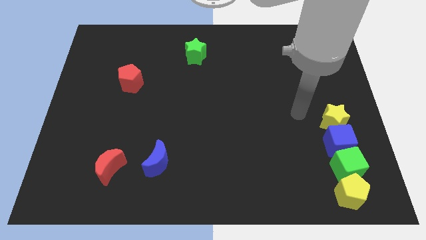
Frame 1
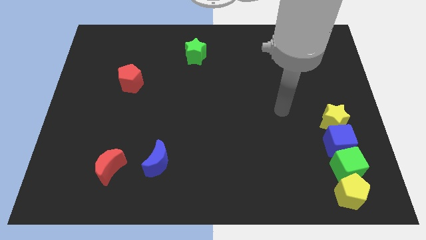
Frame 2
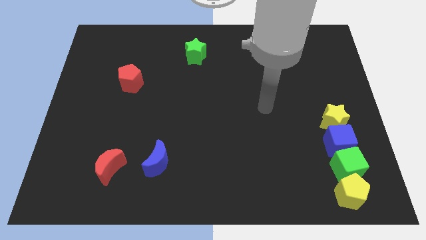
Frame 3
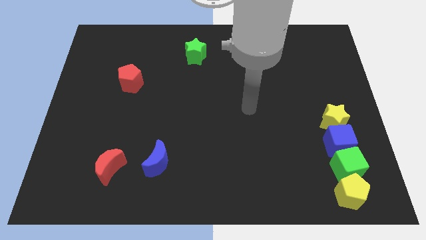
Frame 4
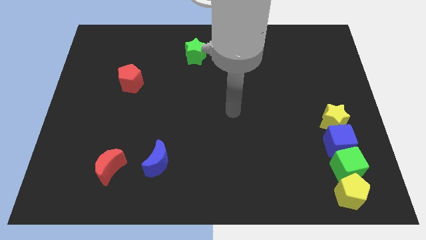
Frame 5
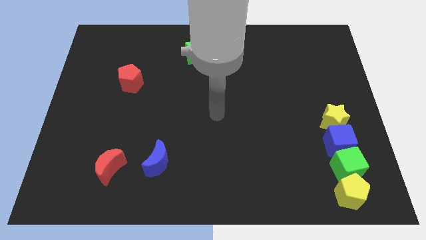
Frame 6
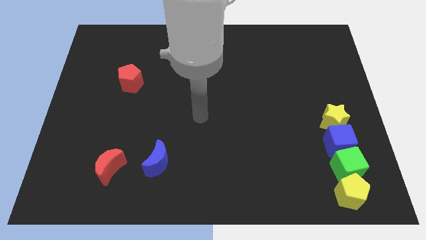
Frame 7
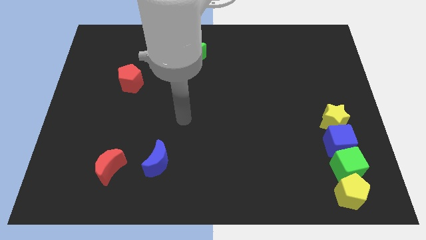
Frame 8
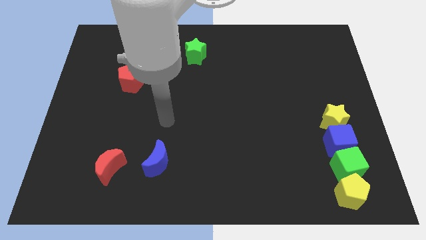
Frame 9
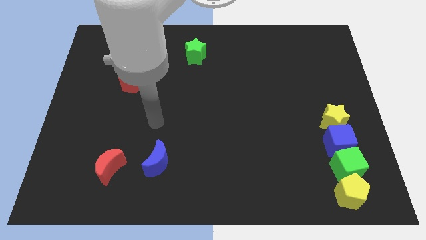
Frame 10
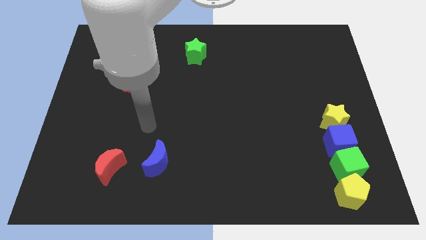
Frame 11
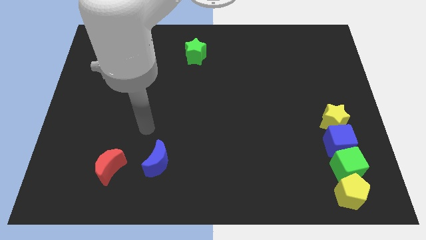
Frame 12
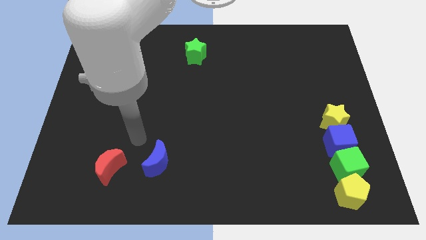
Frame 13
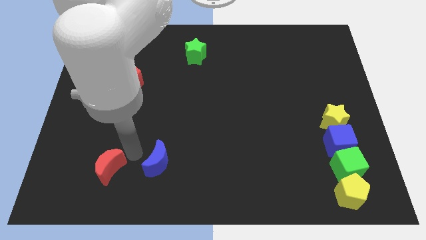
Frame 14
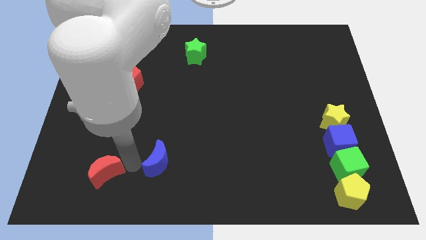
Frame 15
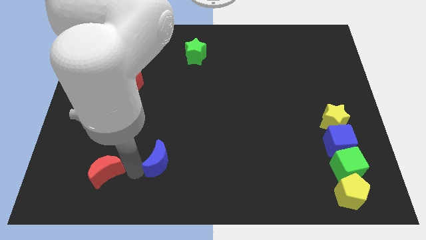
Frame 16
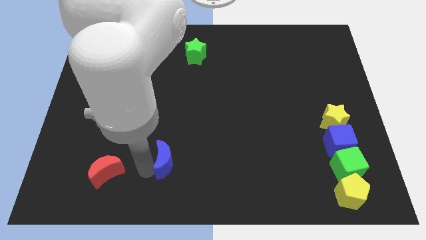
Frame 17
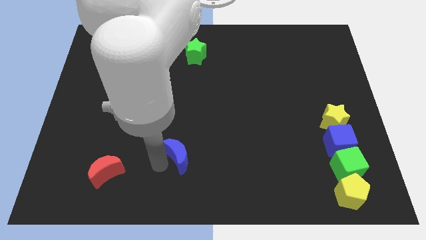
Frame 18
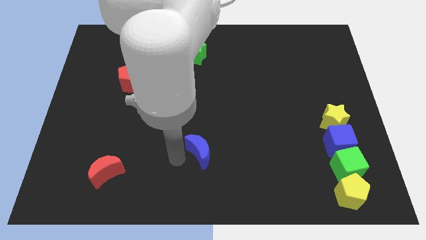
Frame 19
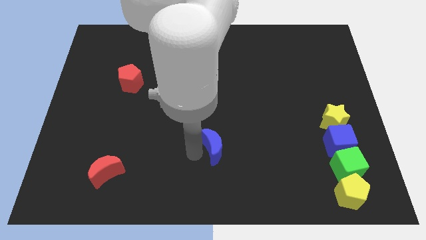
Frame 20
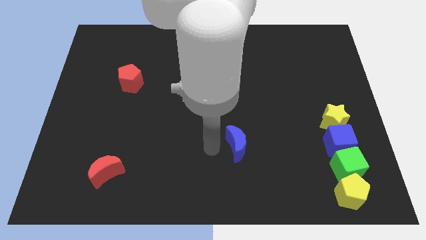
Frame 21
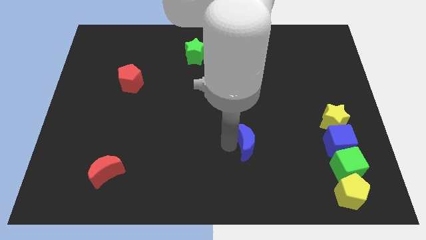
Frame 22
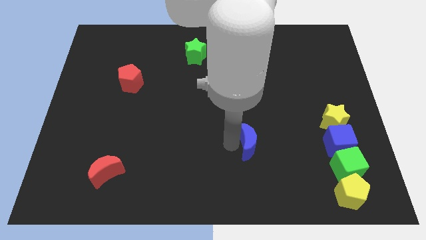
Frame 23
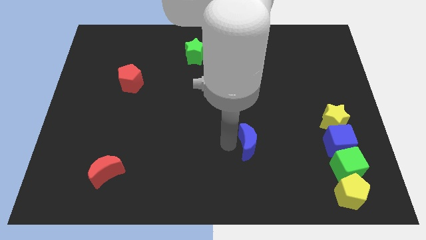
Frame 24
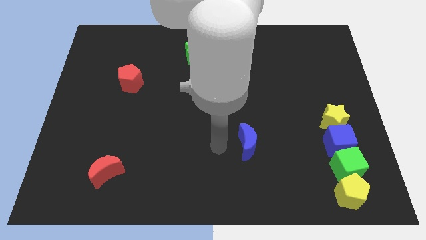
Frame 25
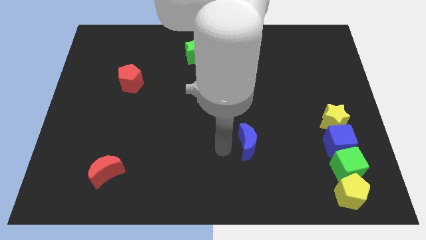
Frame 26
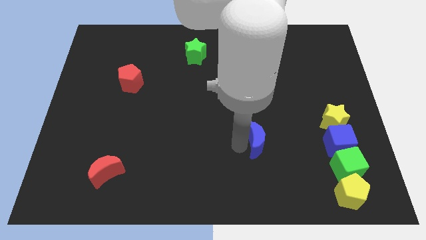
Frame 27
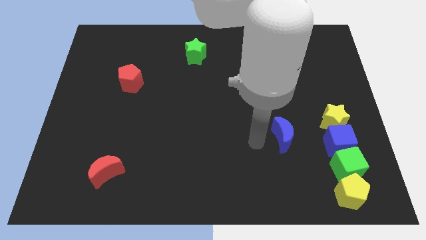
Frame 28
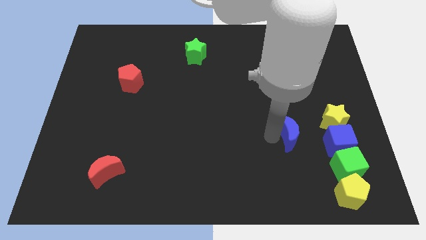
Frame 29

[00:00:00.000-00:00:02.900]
move the moons in opposite directions

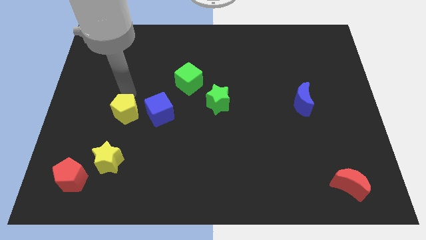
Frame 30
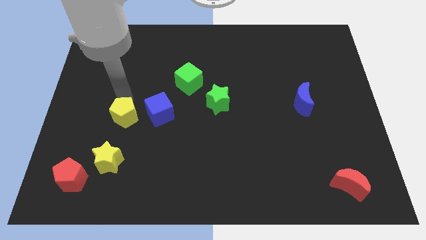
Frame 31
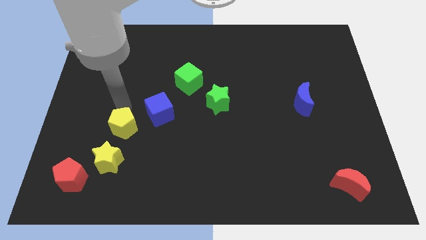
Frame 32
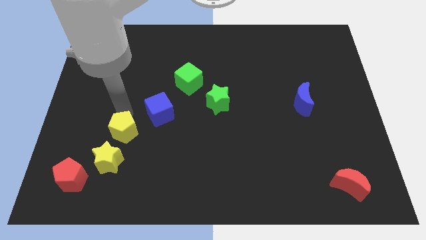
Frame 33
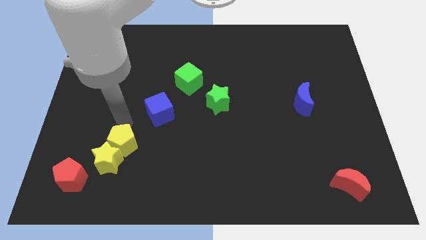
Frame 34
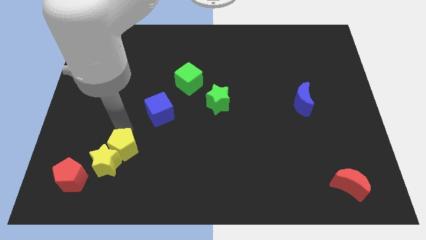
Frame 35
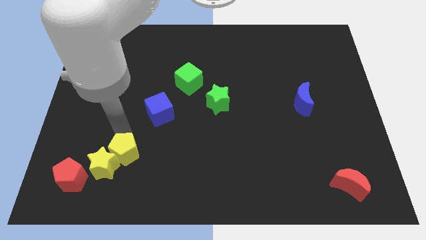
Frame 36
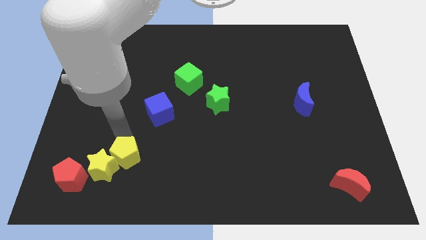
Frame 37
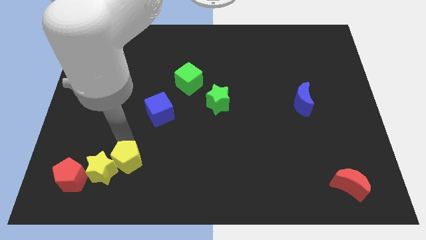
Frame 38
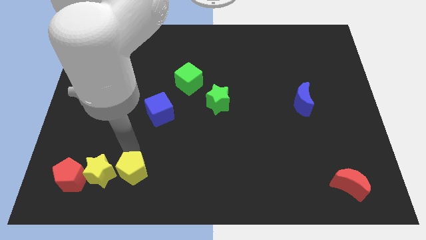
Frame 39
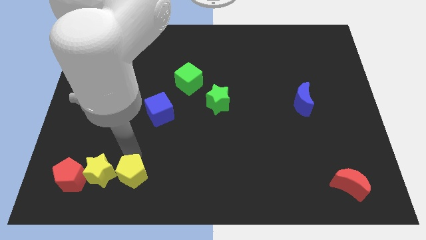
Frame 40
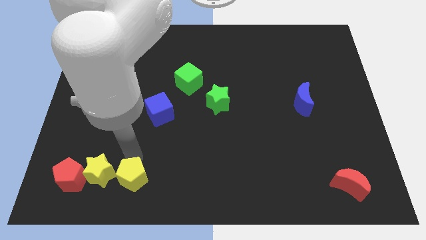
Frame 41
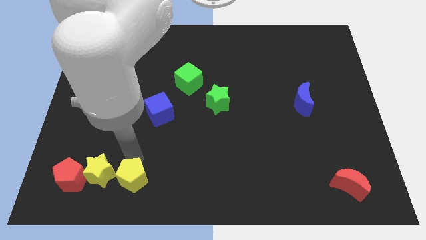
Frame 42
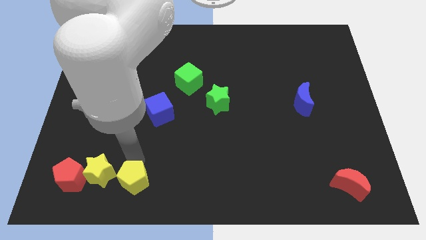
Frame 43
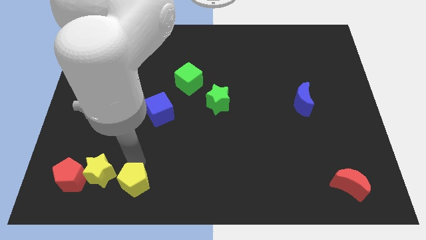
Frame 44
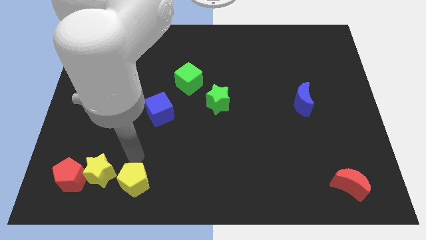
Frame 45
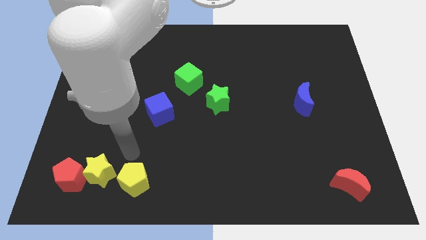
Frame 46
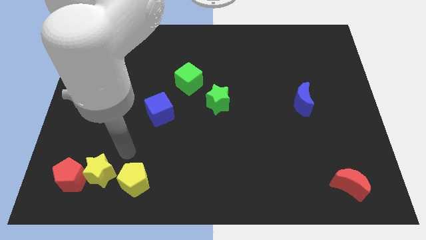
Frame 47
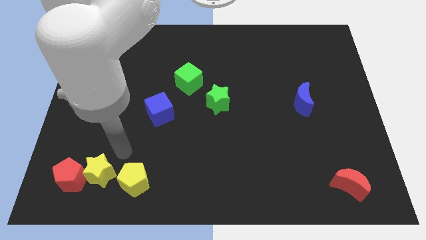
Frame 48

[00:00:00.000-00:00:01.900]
place the yellow pentagon to the right of the yellow star

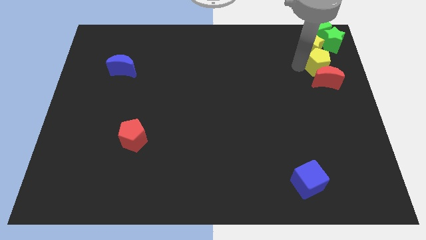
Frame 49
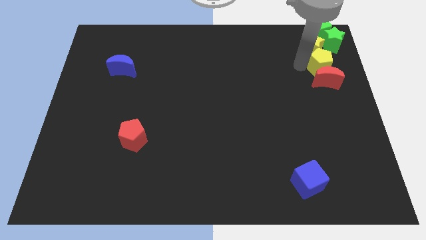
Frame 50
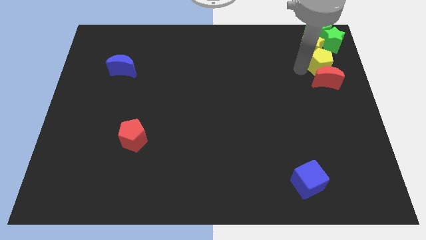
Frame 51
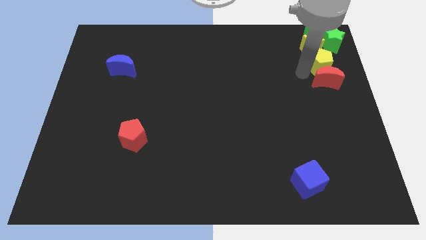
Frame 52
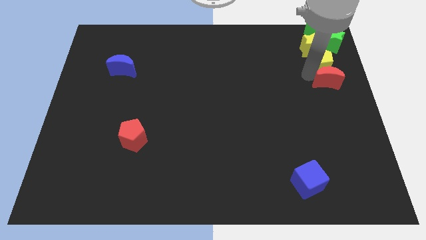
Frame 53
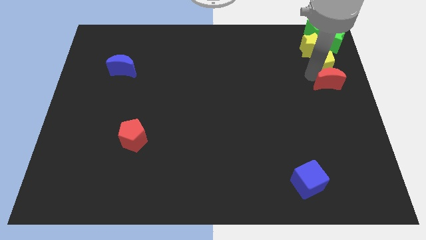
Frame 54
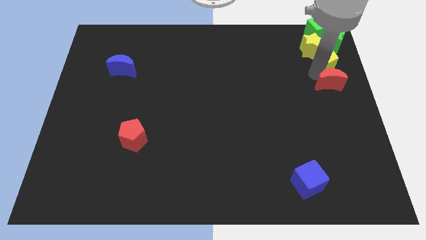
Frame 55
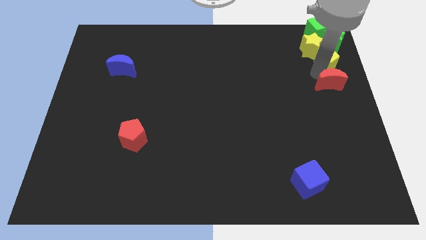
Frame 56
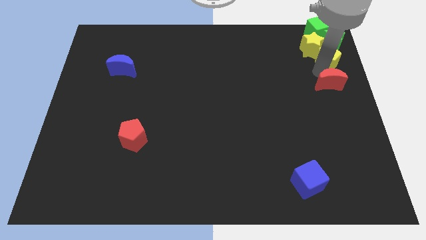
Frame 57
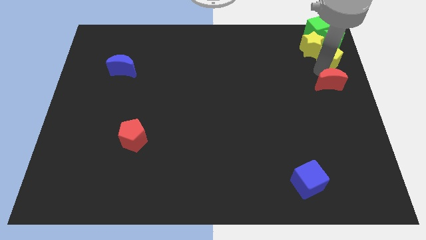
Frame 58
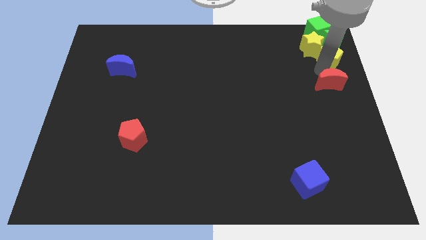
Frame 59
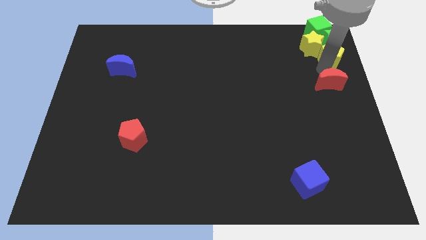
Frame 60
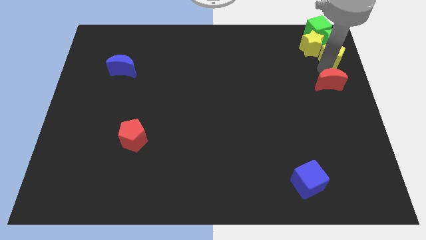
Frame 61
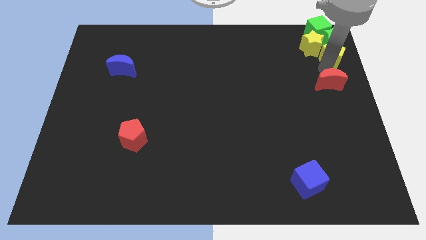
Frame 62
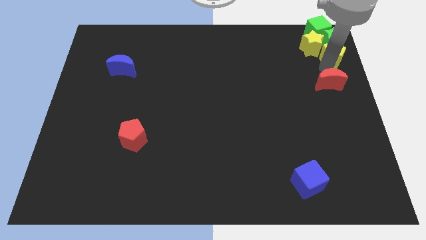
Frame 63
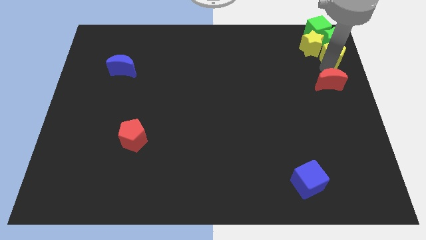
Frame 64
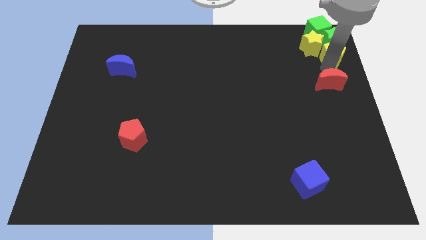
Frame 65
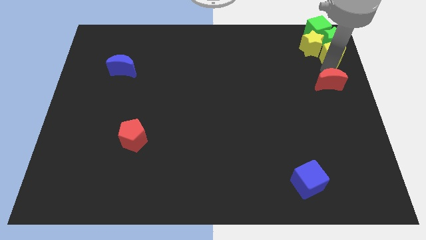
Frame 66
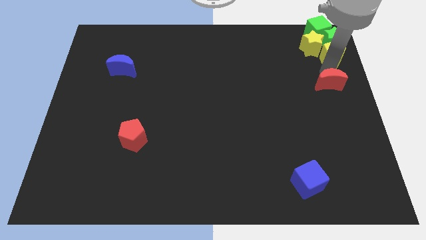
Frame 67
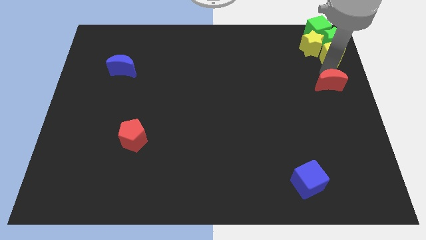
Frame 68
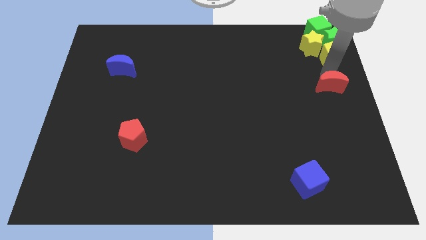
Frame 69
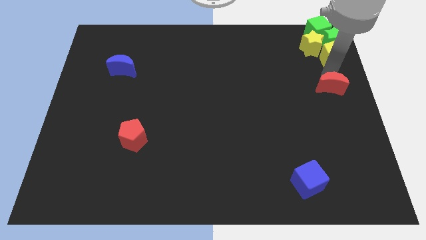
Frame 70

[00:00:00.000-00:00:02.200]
move the yellow pentagon to the bottom of the green star

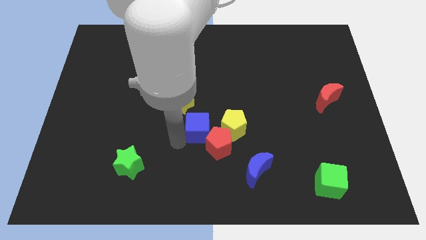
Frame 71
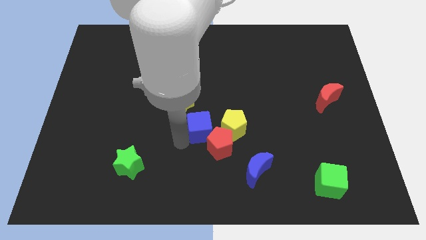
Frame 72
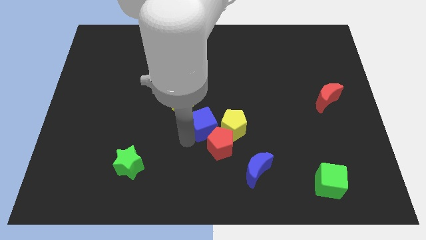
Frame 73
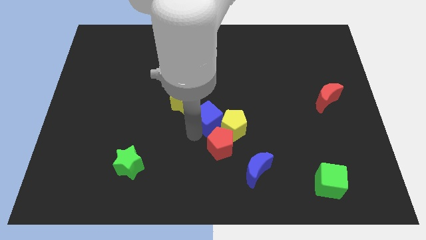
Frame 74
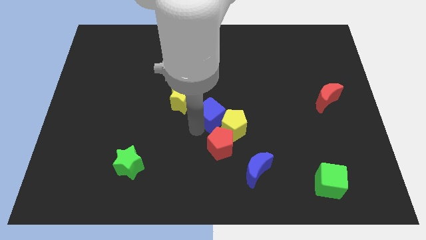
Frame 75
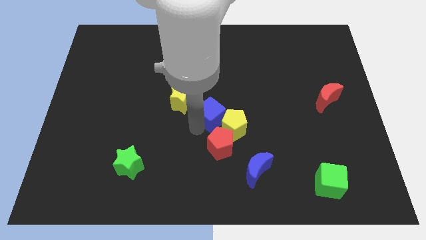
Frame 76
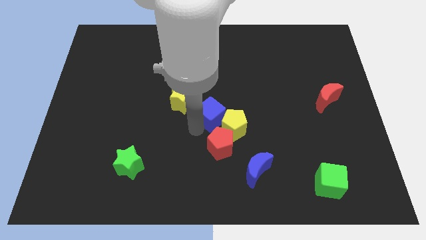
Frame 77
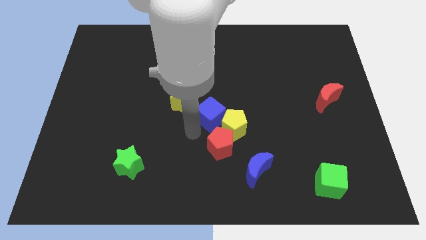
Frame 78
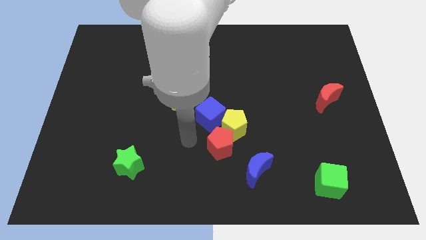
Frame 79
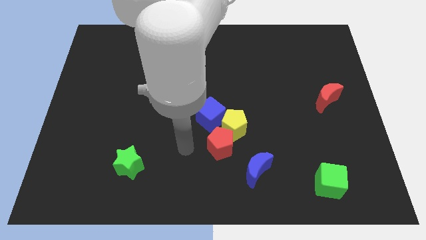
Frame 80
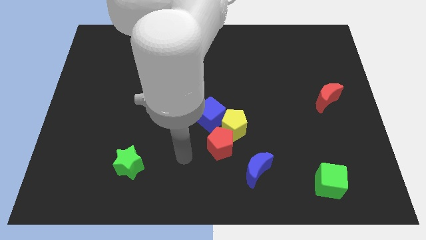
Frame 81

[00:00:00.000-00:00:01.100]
push the blue cube in between the yellow star and the yellow pentagon

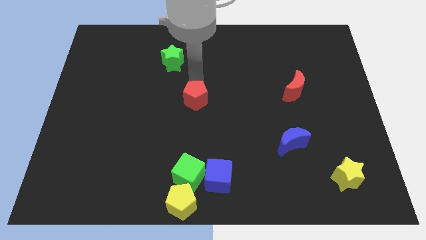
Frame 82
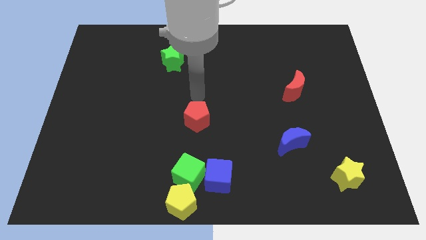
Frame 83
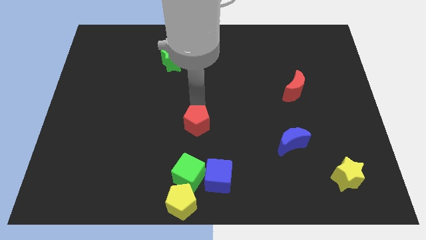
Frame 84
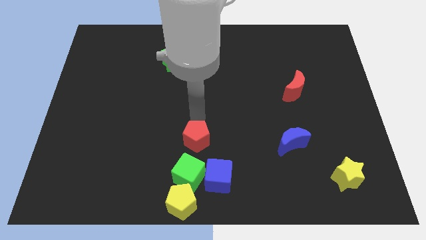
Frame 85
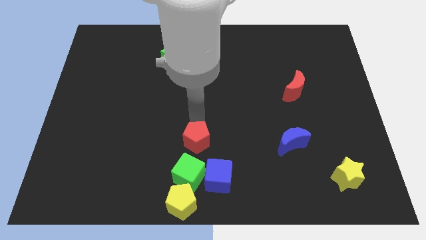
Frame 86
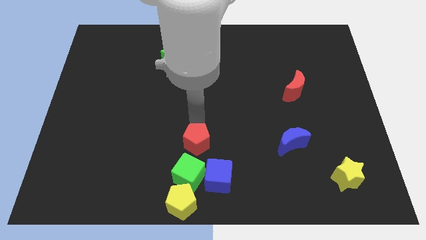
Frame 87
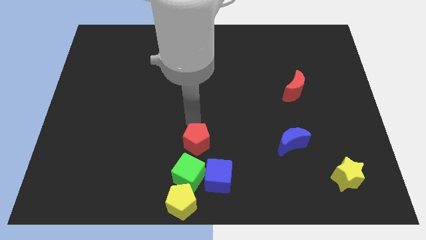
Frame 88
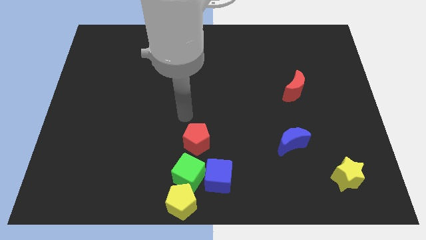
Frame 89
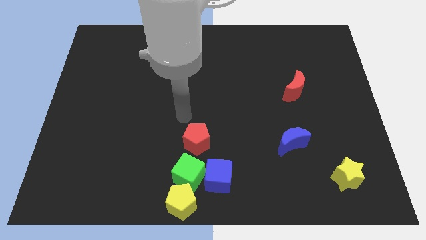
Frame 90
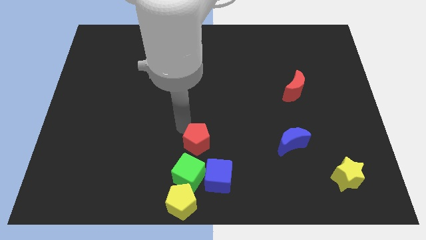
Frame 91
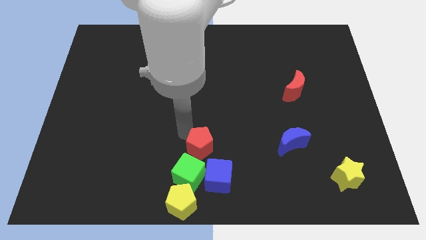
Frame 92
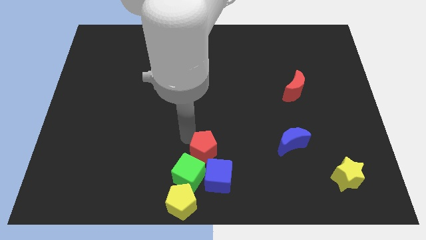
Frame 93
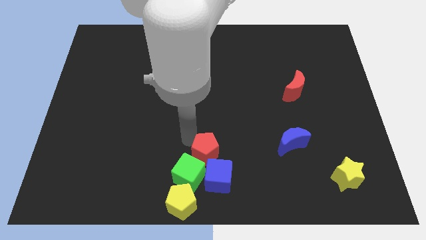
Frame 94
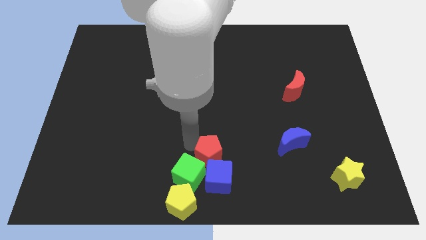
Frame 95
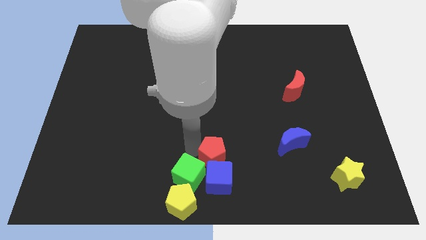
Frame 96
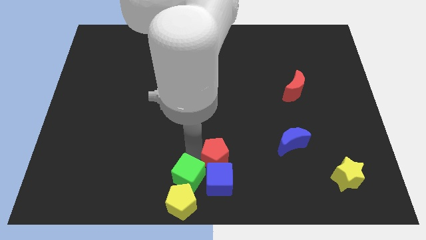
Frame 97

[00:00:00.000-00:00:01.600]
push red pentagon towards blue cube
